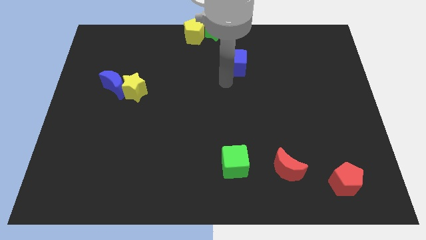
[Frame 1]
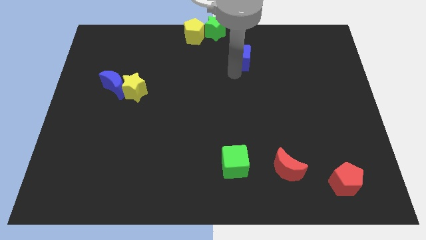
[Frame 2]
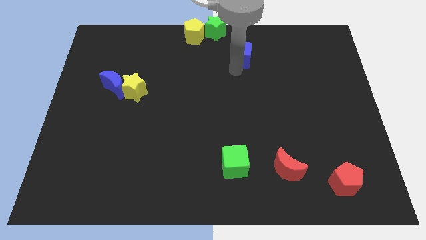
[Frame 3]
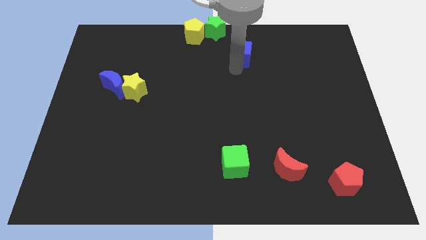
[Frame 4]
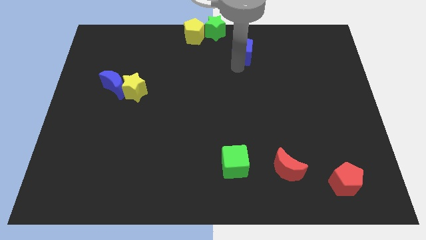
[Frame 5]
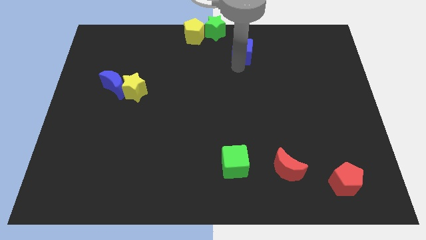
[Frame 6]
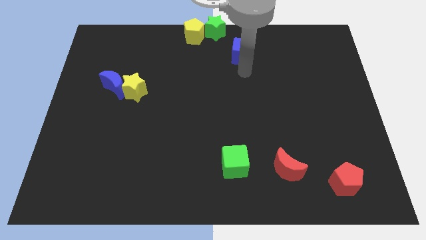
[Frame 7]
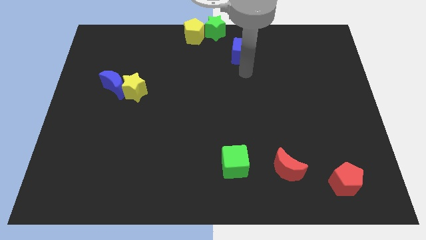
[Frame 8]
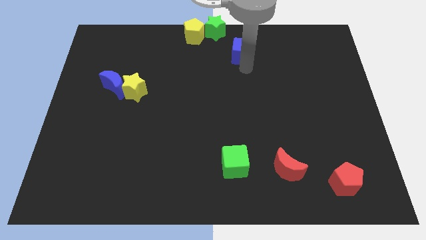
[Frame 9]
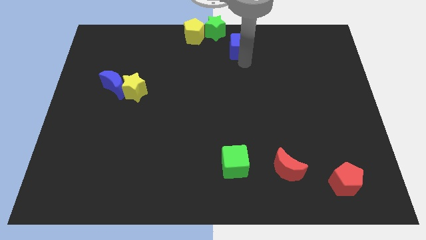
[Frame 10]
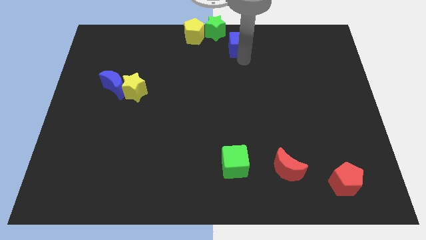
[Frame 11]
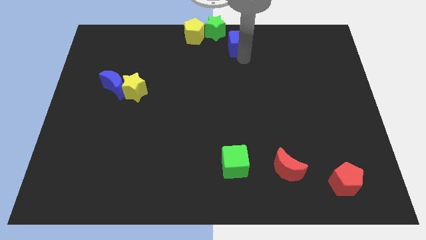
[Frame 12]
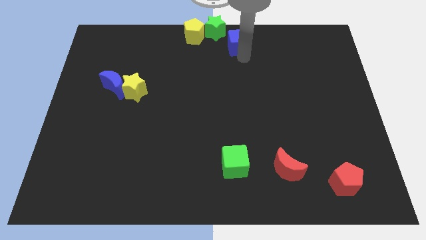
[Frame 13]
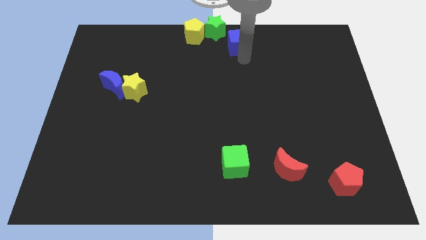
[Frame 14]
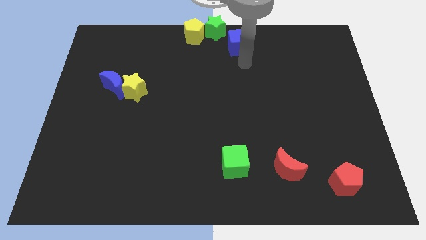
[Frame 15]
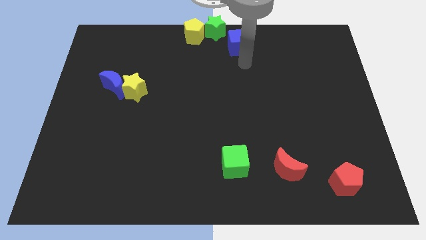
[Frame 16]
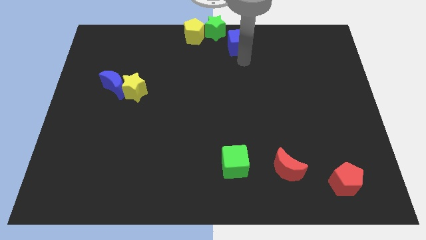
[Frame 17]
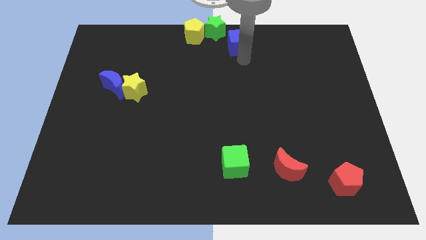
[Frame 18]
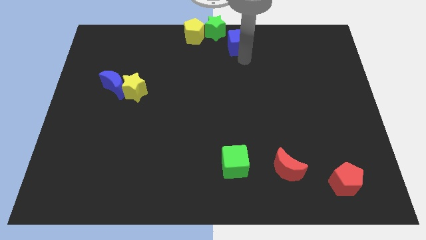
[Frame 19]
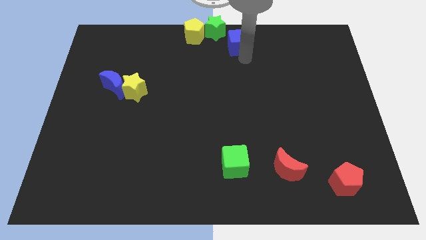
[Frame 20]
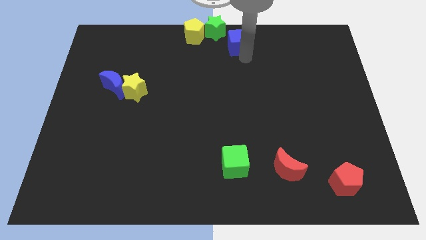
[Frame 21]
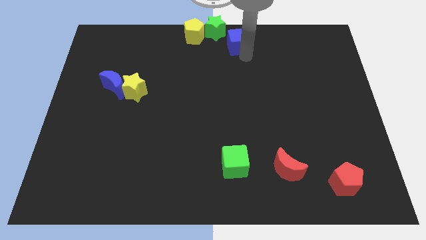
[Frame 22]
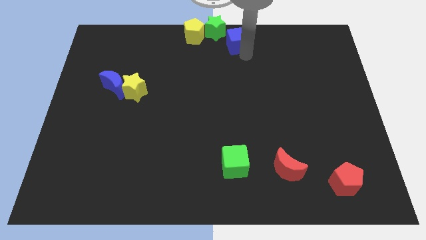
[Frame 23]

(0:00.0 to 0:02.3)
drag the blue cube towards the green star

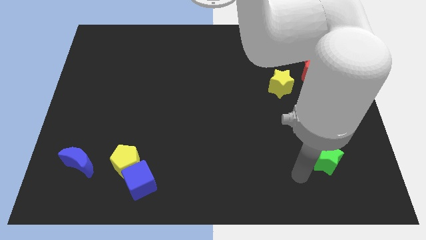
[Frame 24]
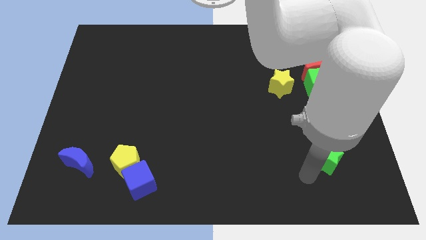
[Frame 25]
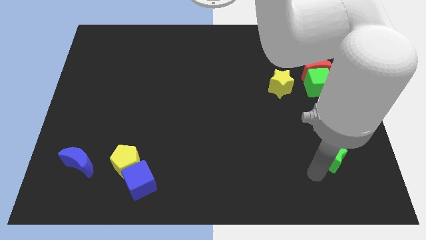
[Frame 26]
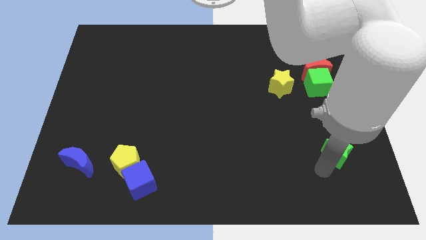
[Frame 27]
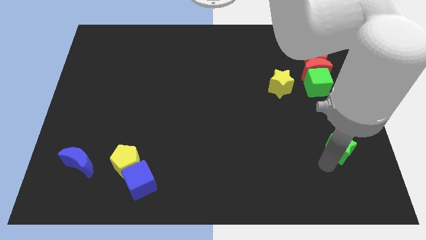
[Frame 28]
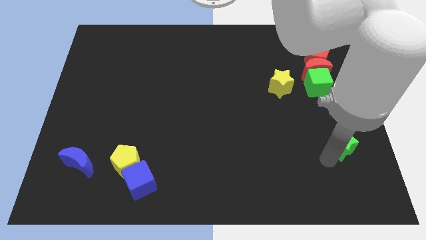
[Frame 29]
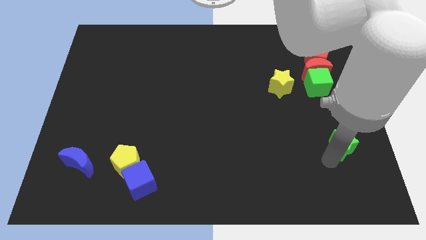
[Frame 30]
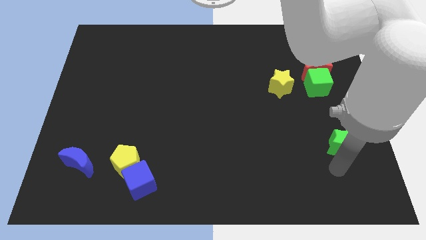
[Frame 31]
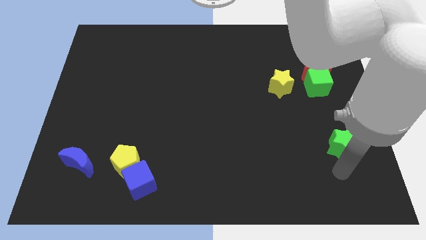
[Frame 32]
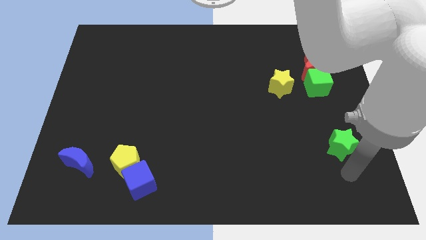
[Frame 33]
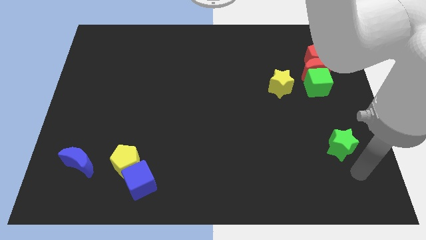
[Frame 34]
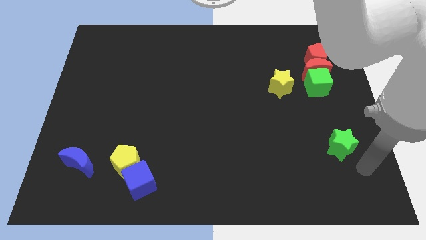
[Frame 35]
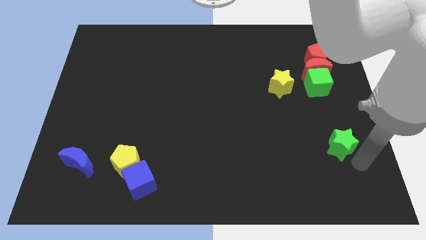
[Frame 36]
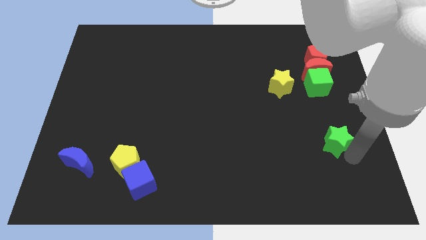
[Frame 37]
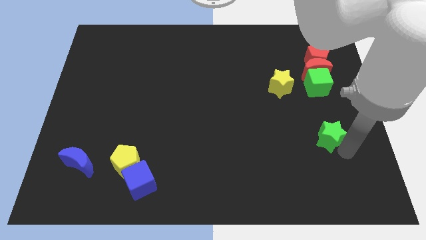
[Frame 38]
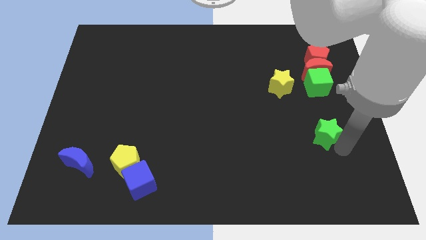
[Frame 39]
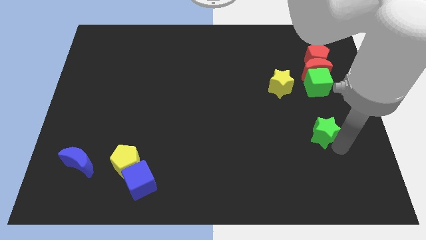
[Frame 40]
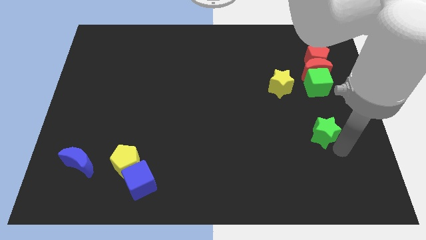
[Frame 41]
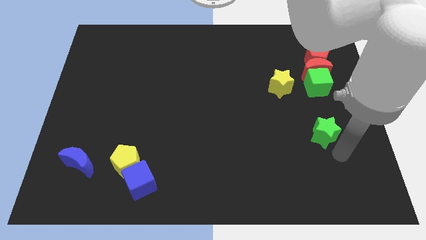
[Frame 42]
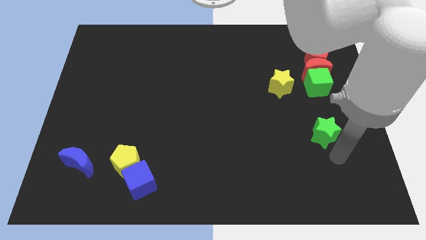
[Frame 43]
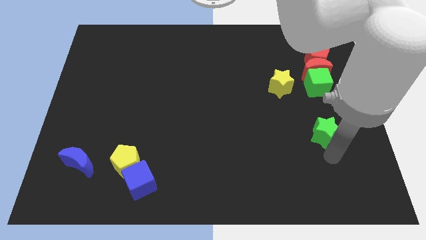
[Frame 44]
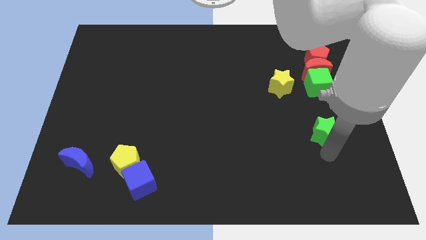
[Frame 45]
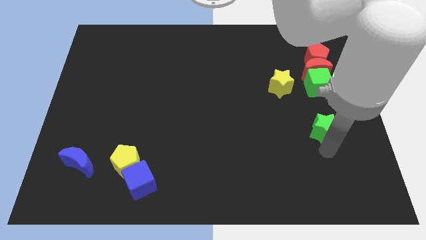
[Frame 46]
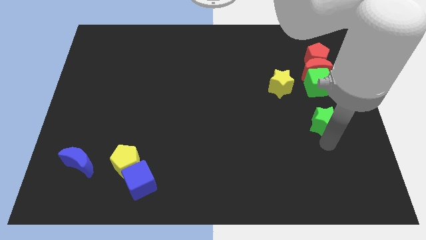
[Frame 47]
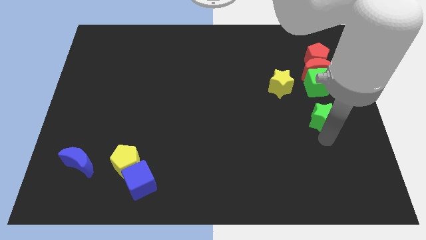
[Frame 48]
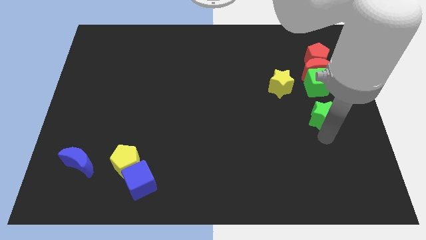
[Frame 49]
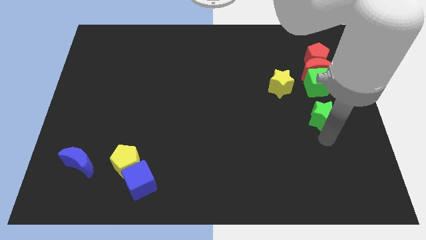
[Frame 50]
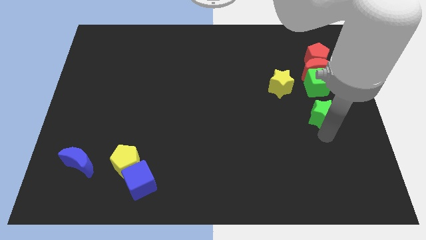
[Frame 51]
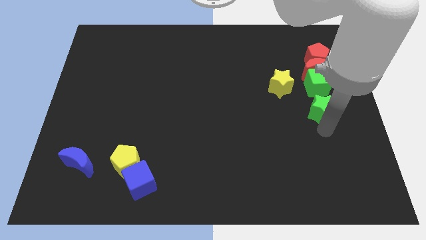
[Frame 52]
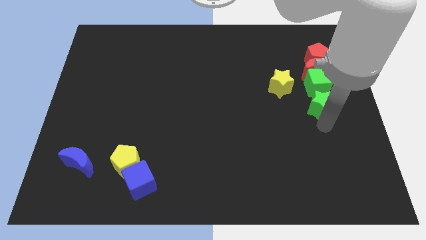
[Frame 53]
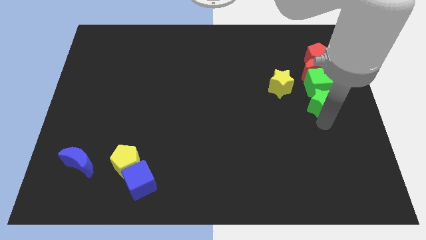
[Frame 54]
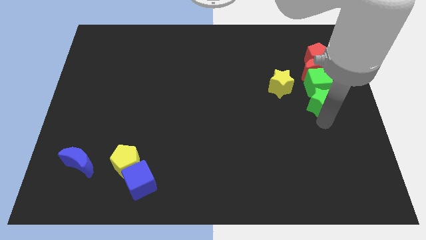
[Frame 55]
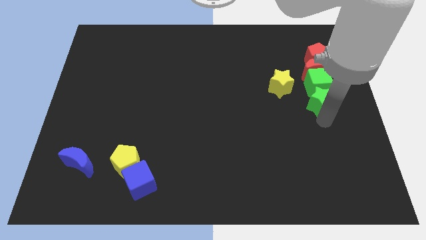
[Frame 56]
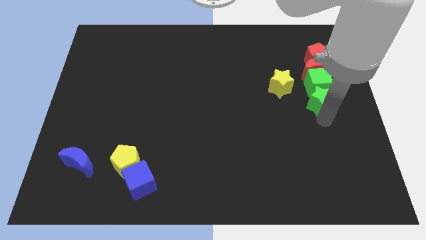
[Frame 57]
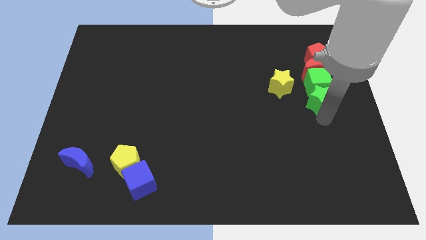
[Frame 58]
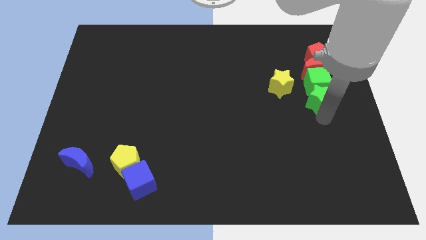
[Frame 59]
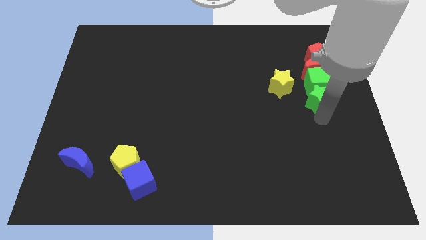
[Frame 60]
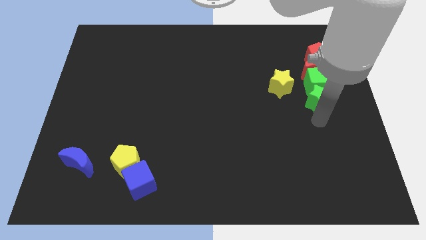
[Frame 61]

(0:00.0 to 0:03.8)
push green star towards green cube

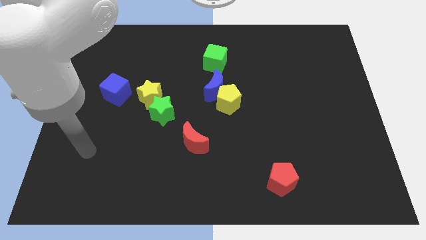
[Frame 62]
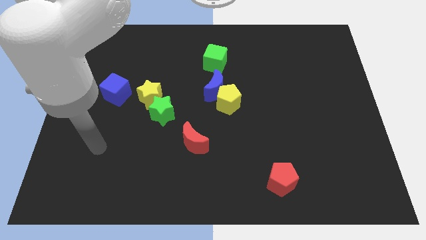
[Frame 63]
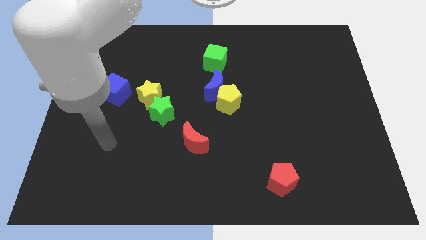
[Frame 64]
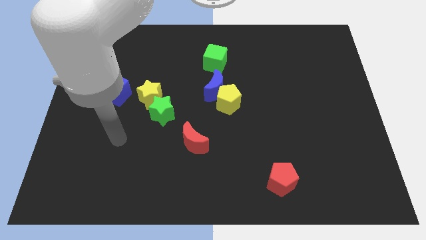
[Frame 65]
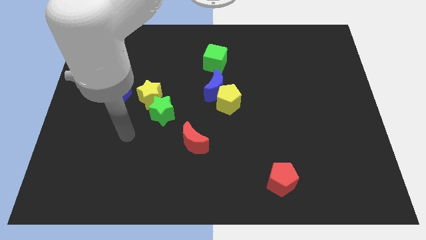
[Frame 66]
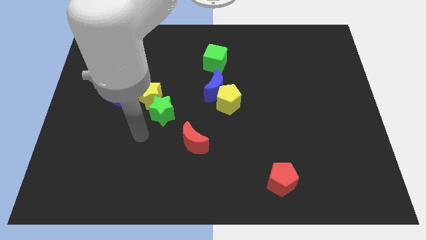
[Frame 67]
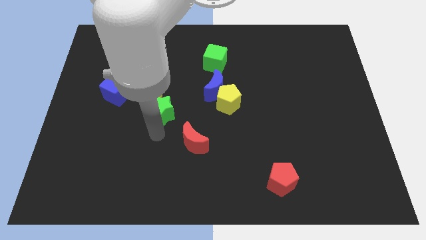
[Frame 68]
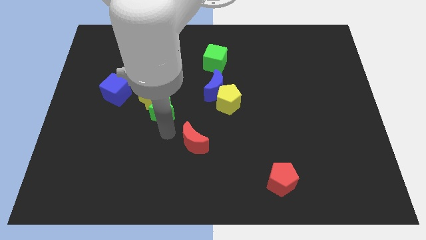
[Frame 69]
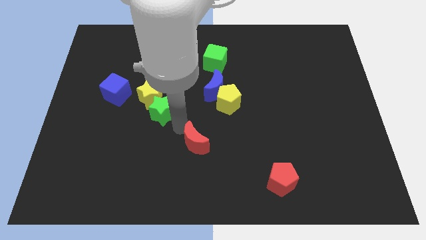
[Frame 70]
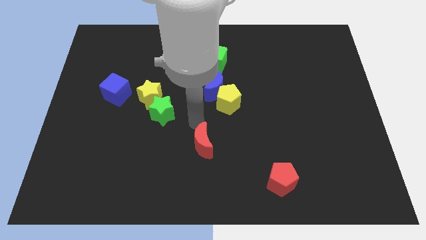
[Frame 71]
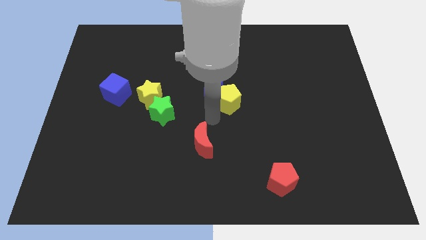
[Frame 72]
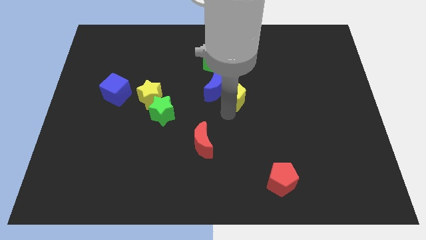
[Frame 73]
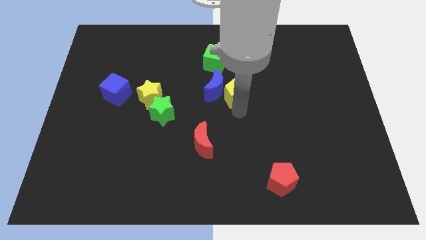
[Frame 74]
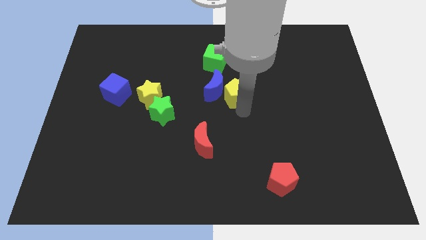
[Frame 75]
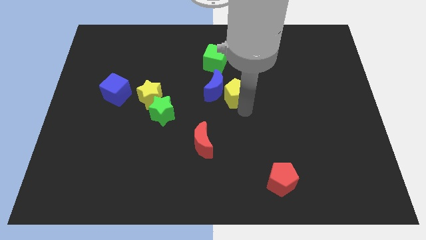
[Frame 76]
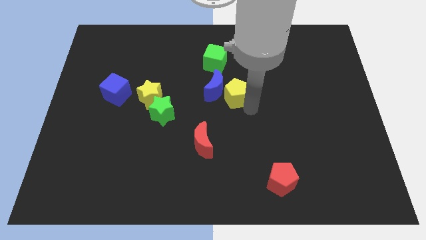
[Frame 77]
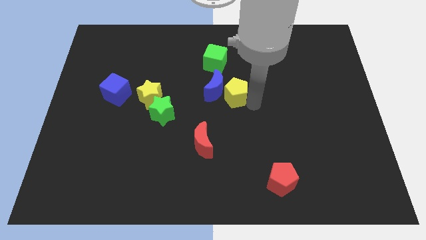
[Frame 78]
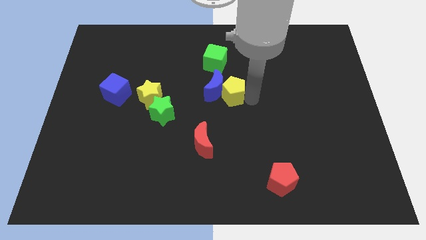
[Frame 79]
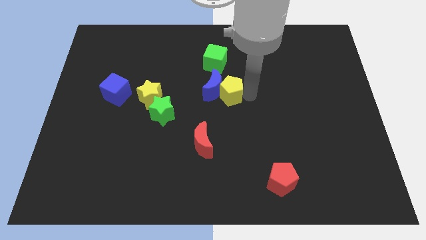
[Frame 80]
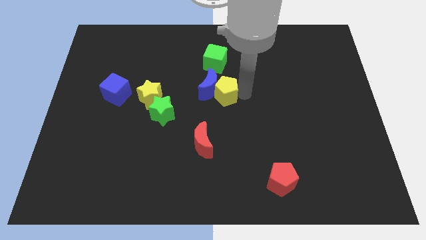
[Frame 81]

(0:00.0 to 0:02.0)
place your arm to the right of the yellow pentagon

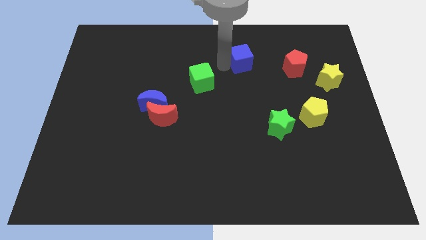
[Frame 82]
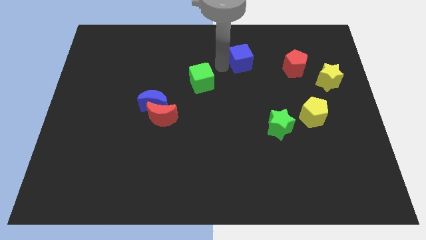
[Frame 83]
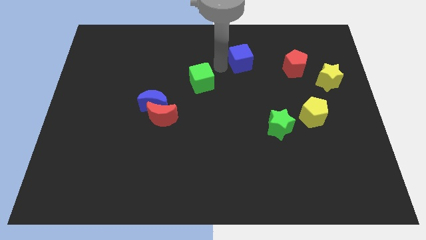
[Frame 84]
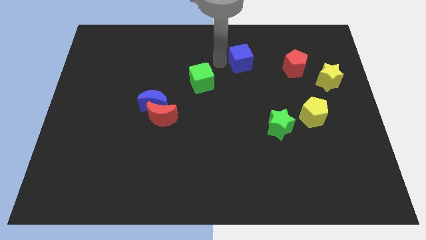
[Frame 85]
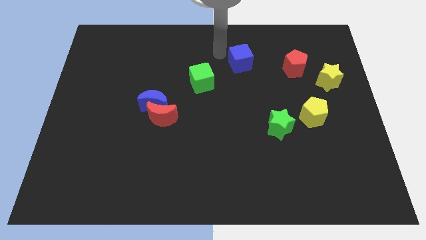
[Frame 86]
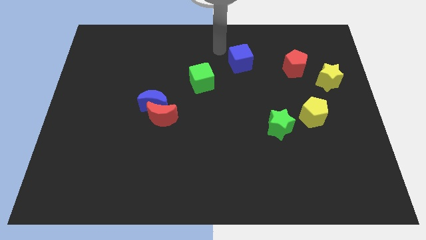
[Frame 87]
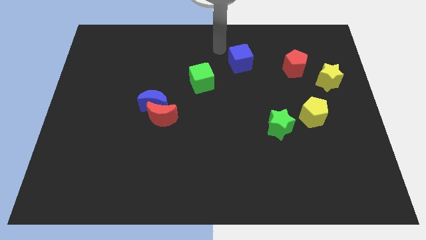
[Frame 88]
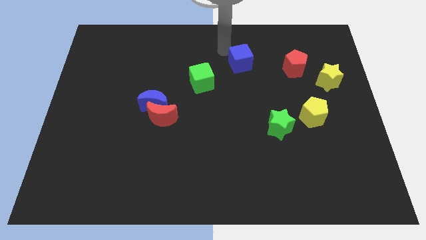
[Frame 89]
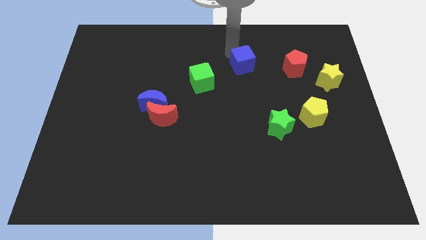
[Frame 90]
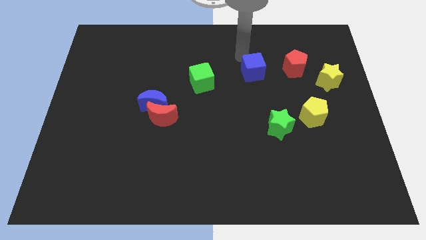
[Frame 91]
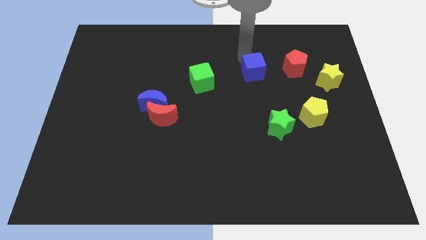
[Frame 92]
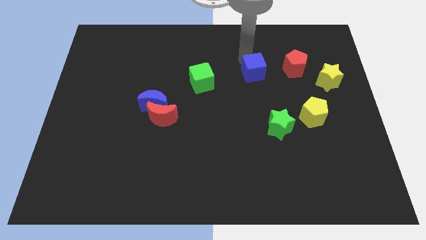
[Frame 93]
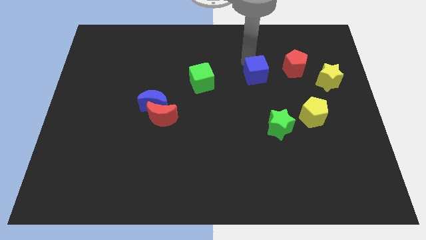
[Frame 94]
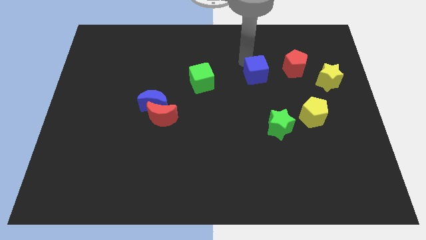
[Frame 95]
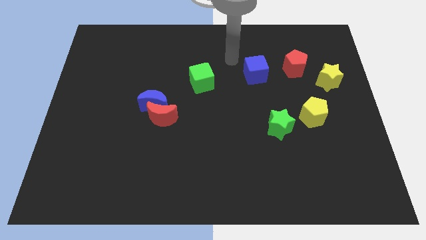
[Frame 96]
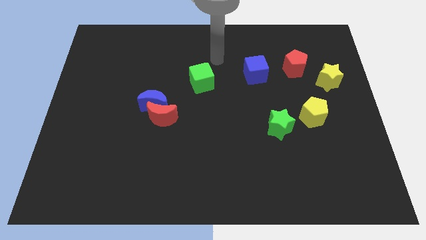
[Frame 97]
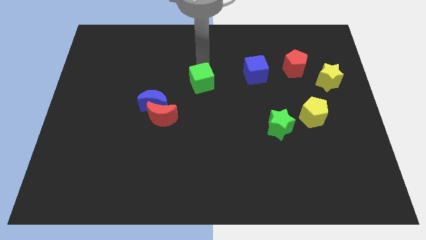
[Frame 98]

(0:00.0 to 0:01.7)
put the blue cube to the left side of the red pentagon
